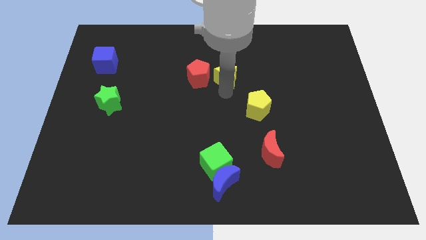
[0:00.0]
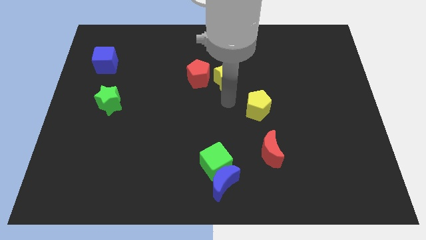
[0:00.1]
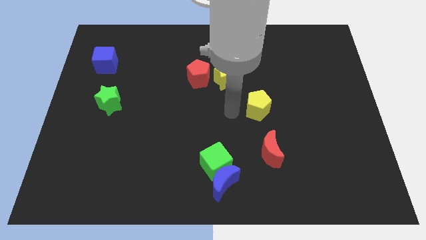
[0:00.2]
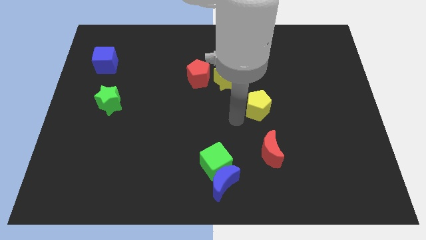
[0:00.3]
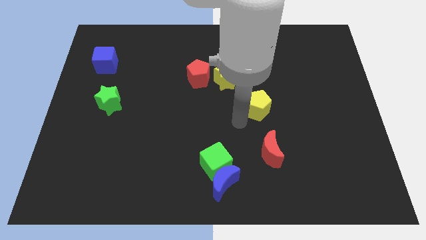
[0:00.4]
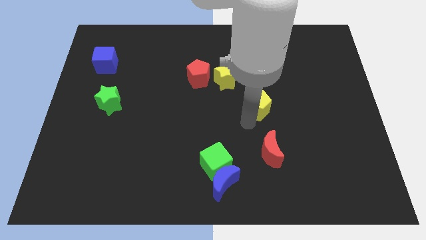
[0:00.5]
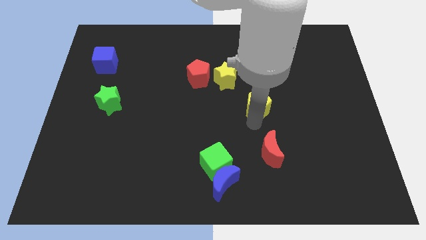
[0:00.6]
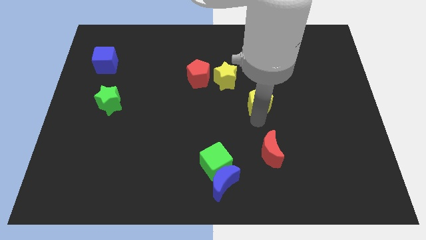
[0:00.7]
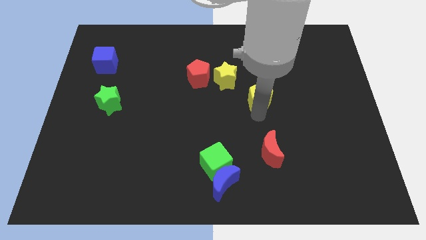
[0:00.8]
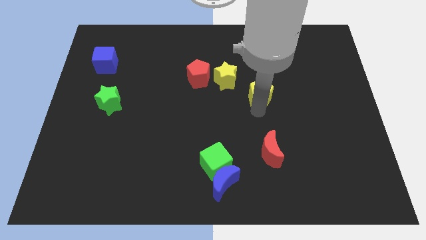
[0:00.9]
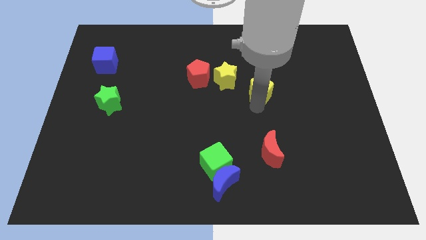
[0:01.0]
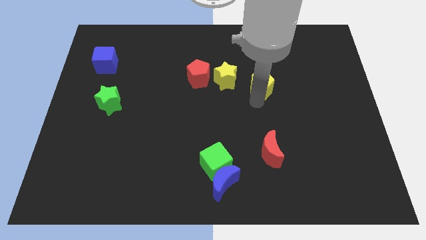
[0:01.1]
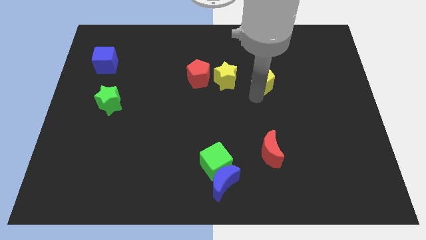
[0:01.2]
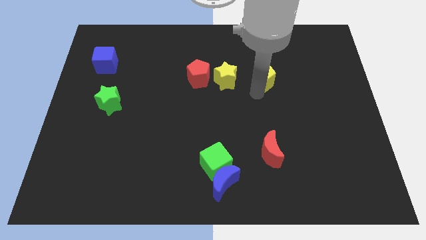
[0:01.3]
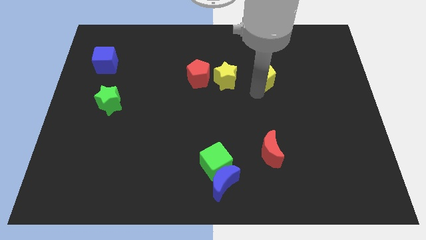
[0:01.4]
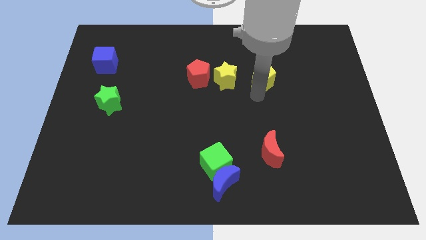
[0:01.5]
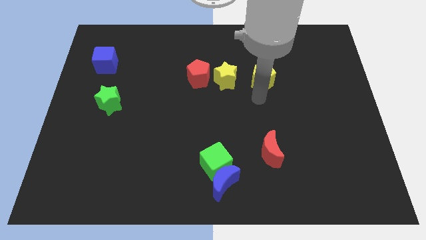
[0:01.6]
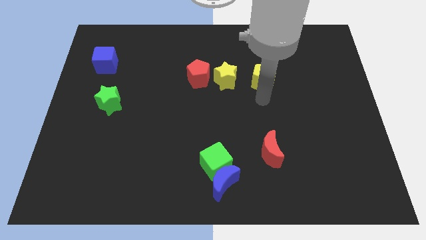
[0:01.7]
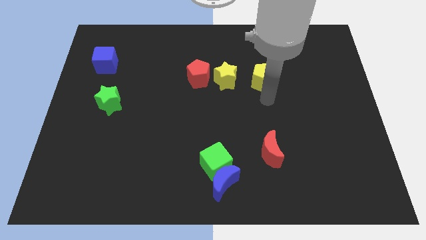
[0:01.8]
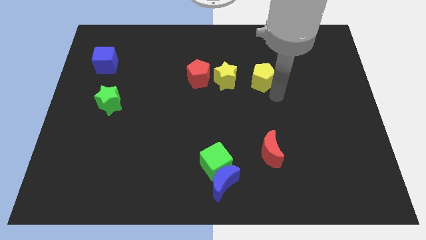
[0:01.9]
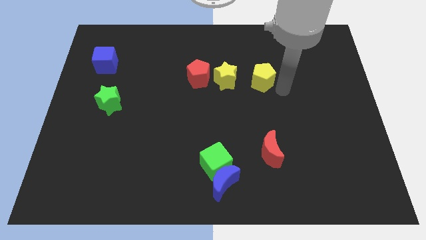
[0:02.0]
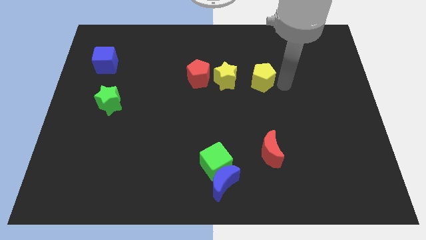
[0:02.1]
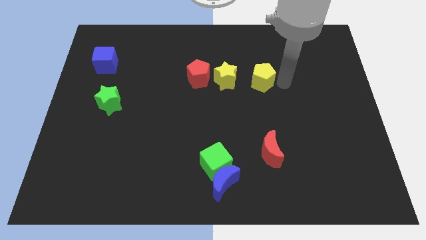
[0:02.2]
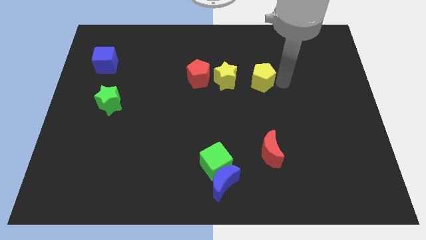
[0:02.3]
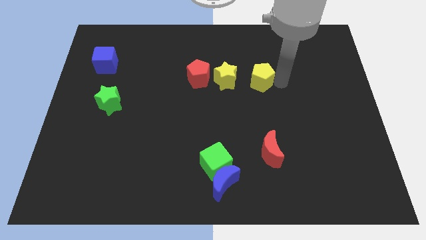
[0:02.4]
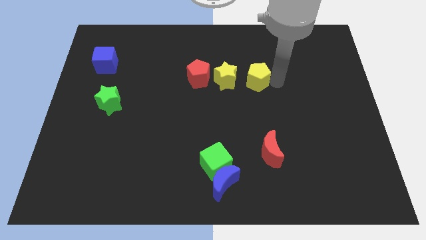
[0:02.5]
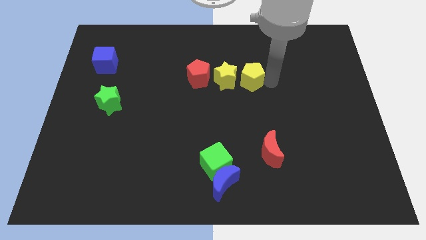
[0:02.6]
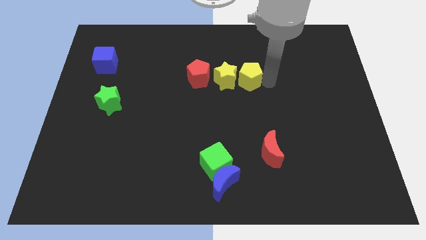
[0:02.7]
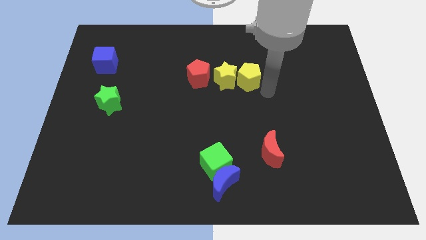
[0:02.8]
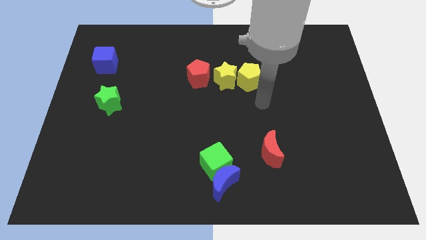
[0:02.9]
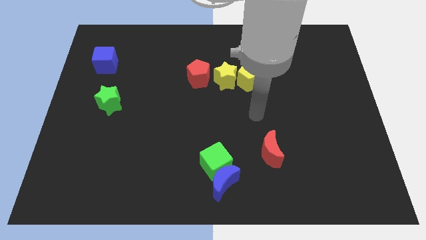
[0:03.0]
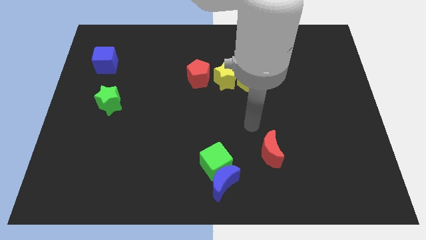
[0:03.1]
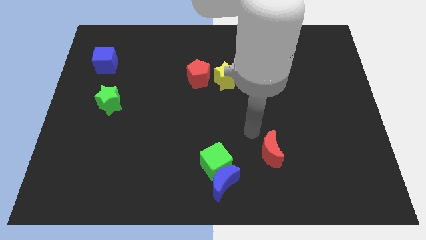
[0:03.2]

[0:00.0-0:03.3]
push the yellow pentagon into the yellow star

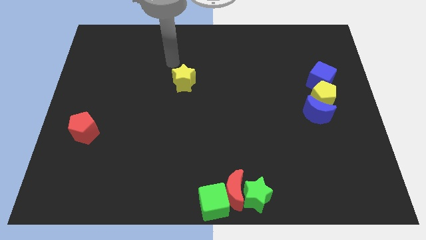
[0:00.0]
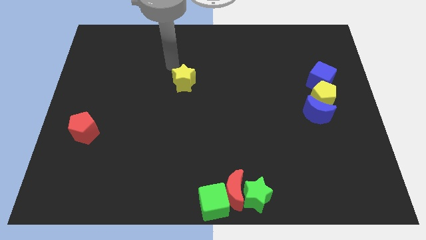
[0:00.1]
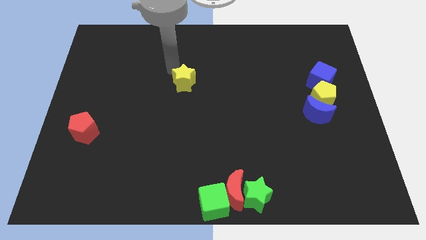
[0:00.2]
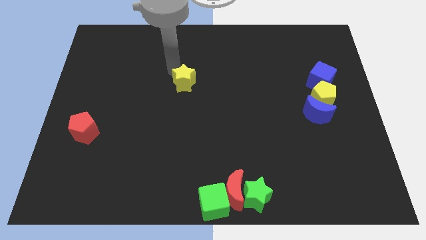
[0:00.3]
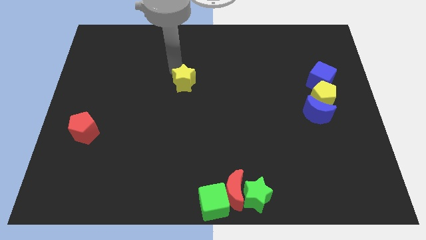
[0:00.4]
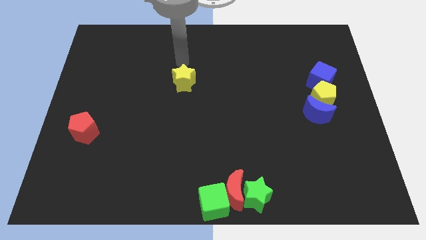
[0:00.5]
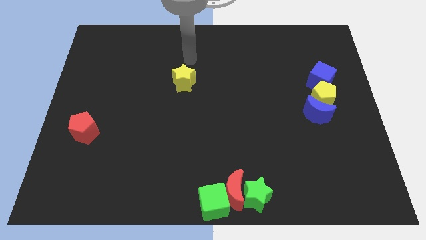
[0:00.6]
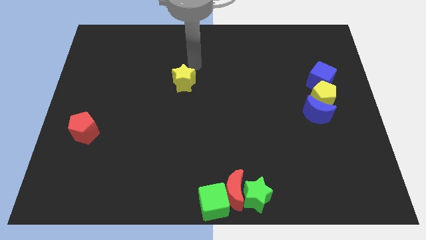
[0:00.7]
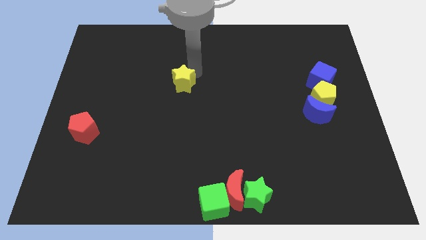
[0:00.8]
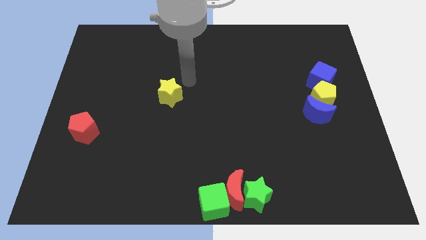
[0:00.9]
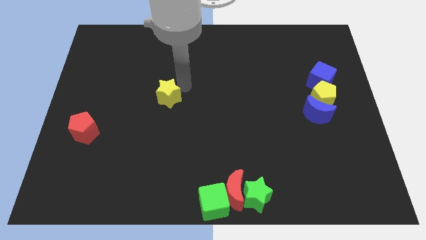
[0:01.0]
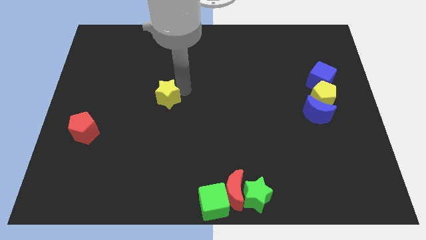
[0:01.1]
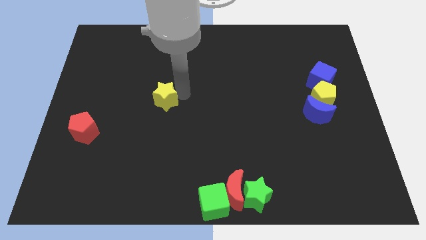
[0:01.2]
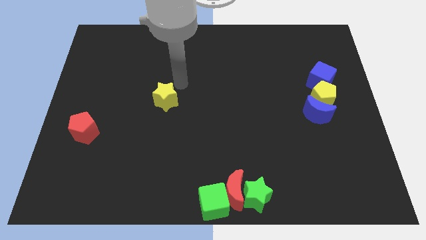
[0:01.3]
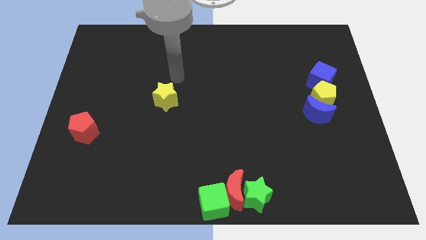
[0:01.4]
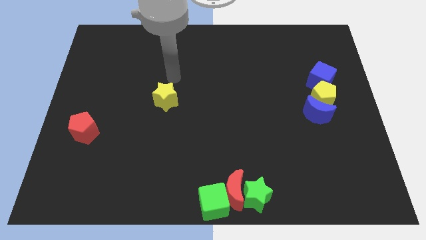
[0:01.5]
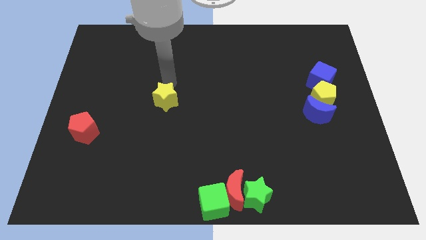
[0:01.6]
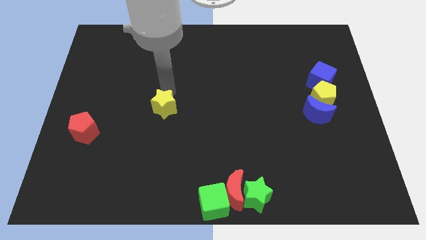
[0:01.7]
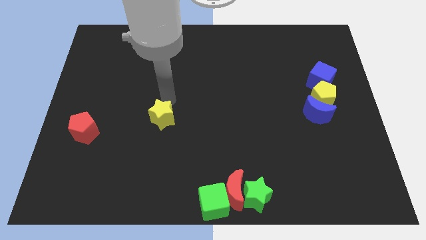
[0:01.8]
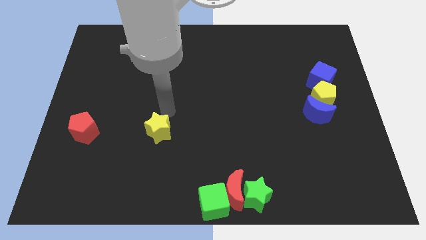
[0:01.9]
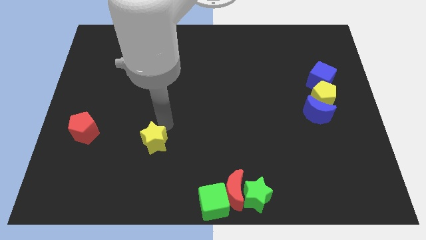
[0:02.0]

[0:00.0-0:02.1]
place the yellow star to the right of the red pentagon

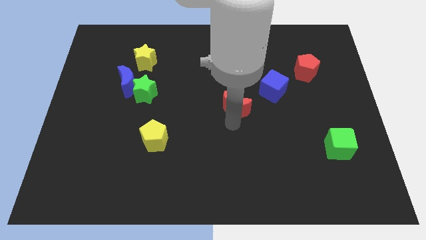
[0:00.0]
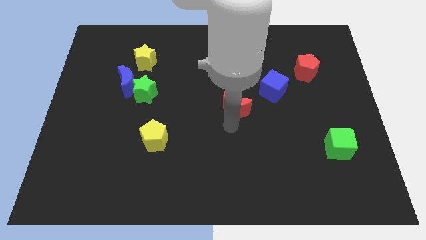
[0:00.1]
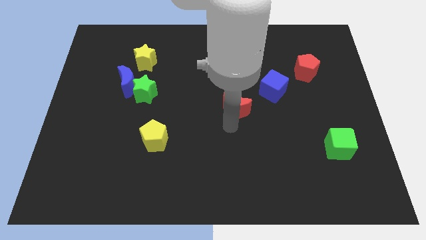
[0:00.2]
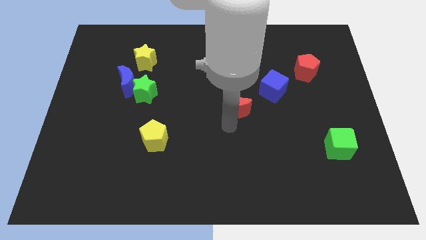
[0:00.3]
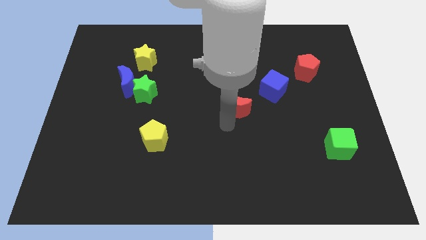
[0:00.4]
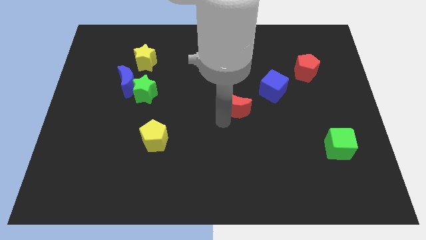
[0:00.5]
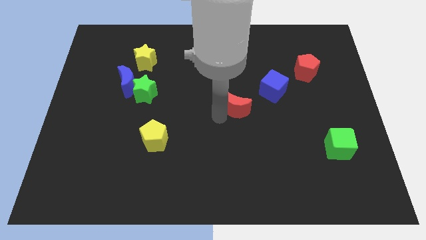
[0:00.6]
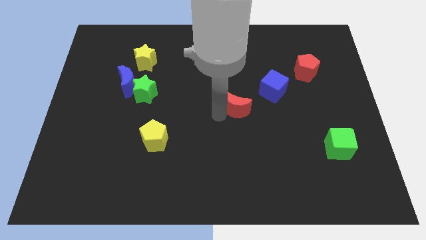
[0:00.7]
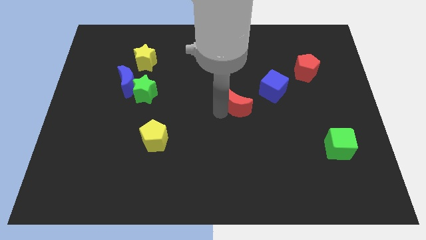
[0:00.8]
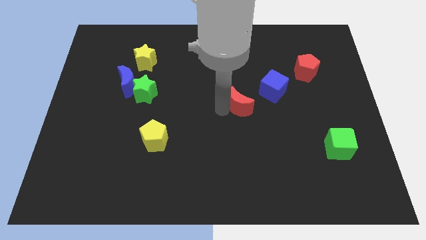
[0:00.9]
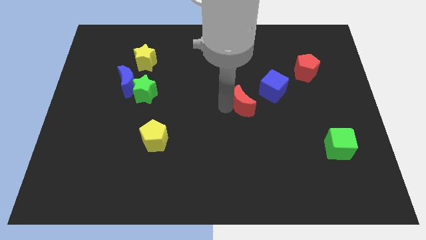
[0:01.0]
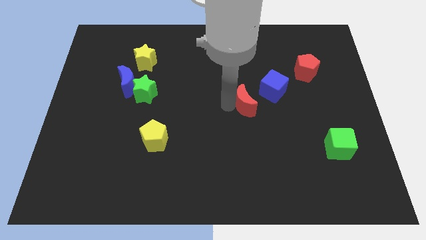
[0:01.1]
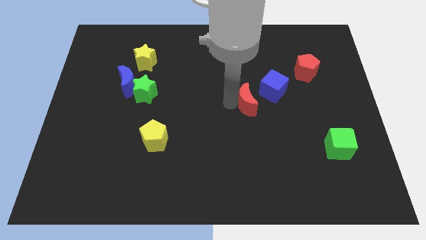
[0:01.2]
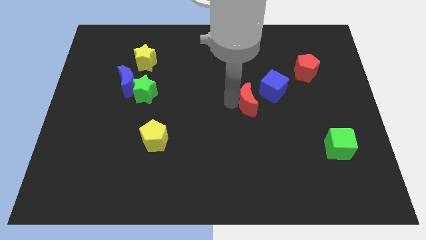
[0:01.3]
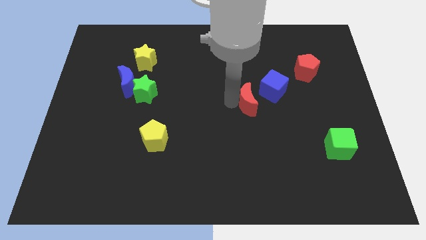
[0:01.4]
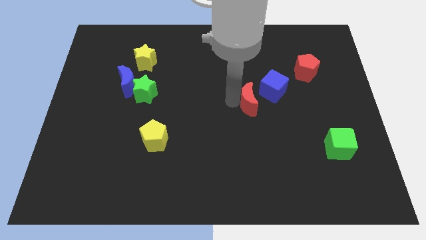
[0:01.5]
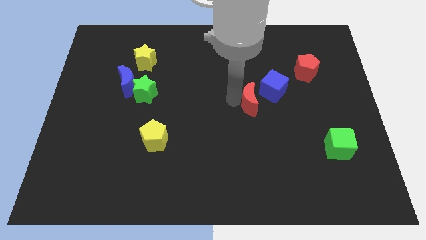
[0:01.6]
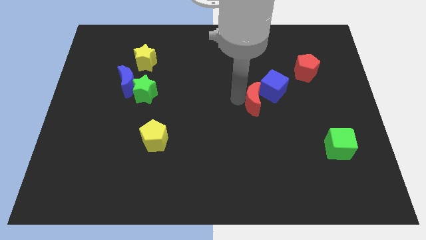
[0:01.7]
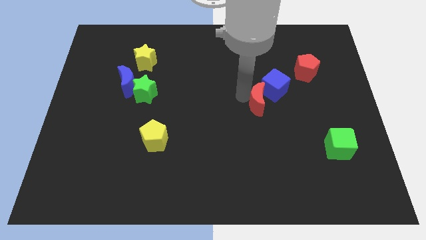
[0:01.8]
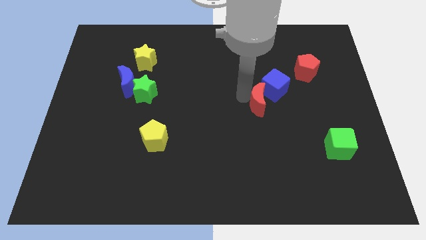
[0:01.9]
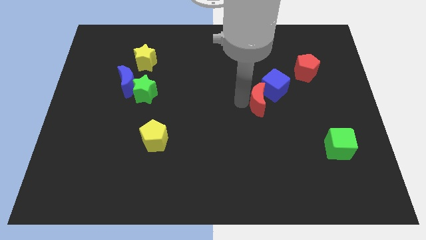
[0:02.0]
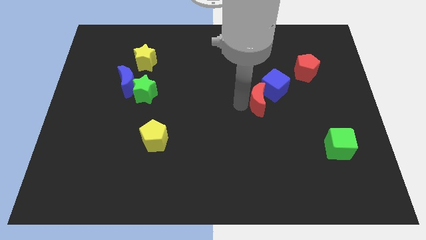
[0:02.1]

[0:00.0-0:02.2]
place the red crescent towards the bottom left side of blue cube

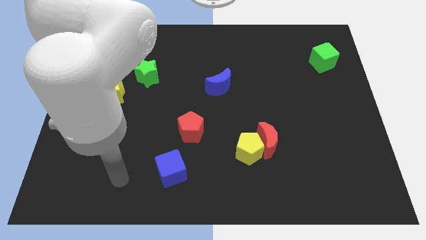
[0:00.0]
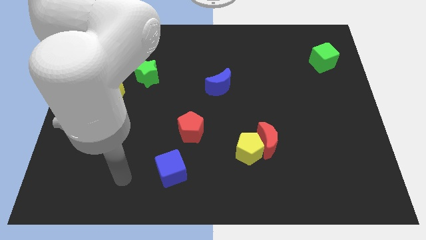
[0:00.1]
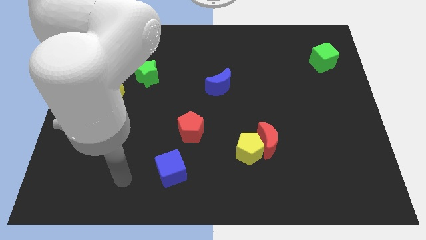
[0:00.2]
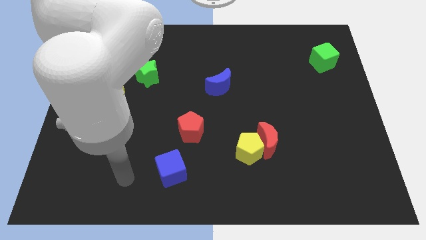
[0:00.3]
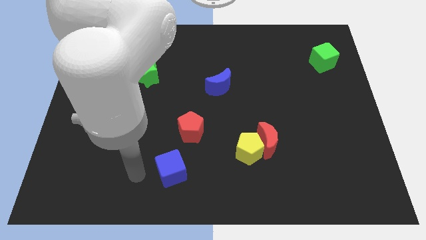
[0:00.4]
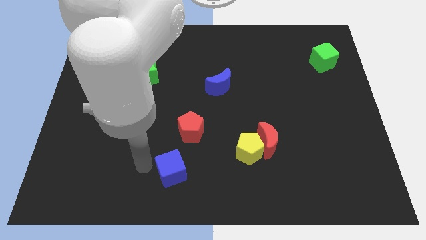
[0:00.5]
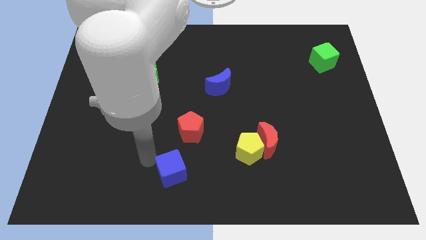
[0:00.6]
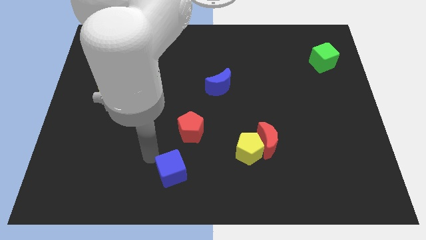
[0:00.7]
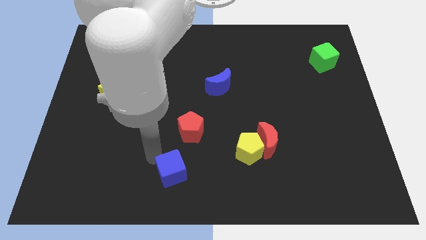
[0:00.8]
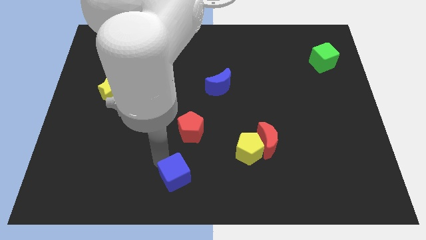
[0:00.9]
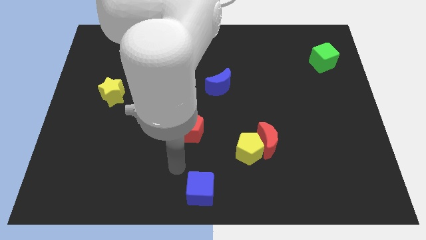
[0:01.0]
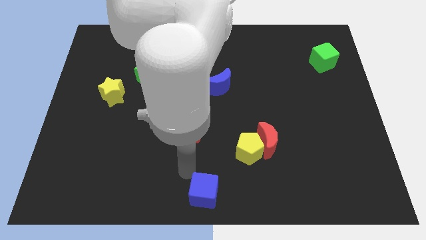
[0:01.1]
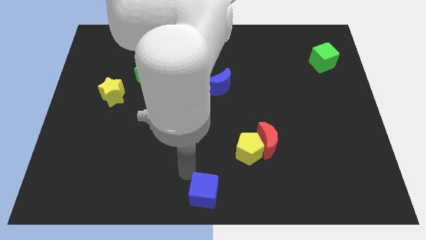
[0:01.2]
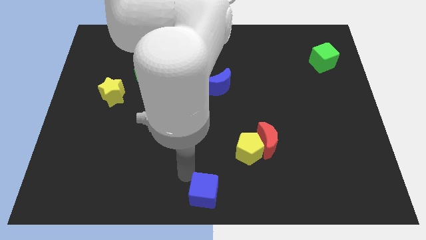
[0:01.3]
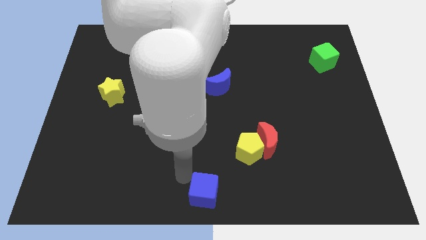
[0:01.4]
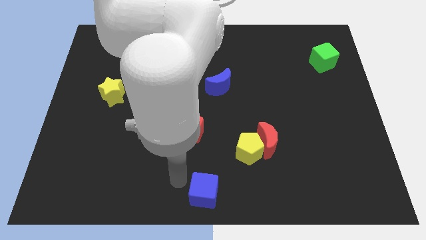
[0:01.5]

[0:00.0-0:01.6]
push the blue cube downward
